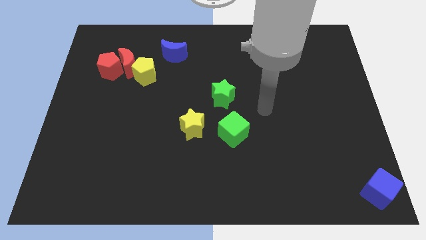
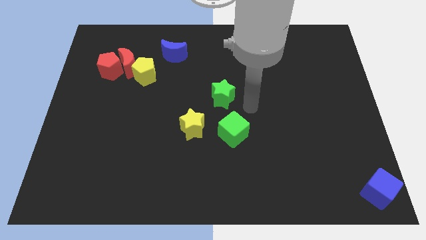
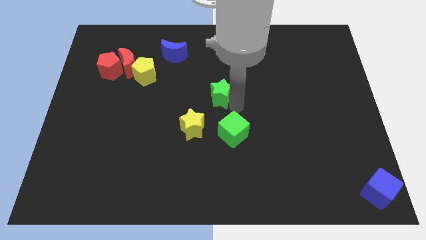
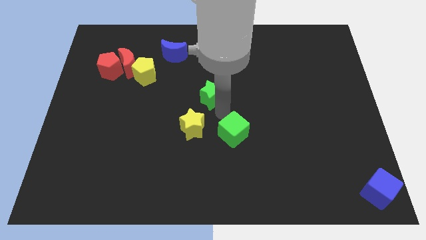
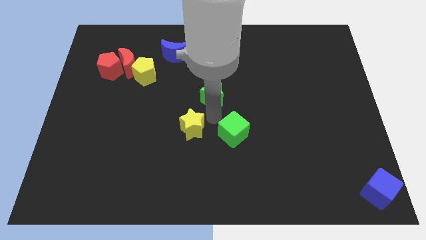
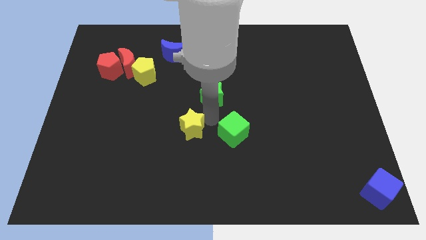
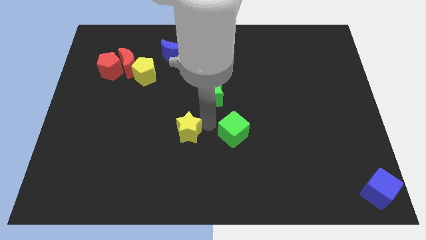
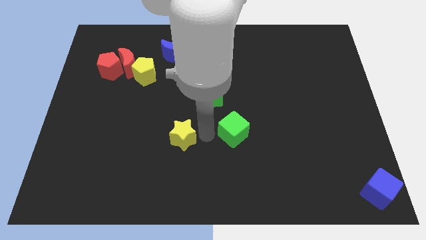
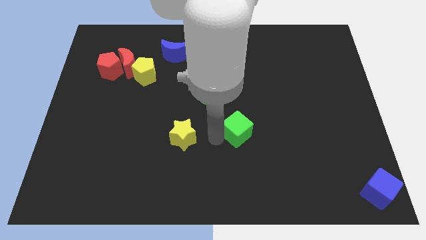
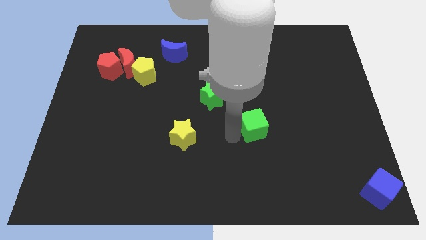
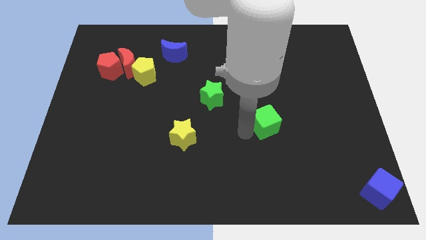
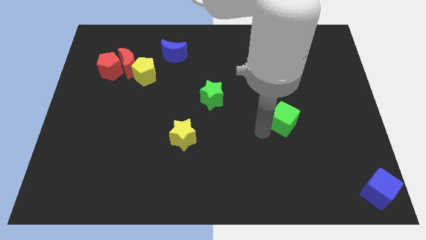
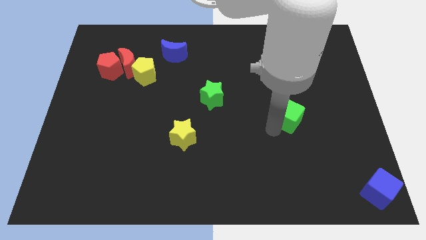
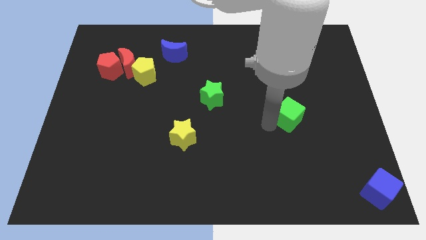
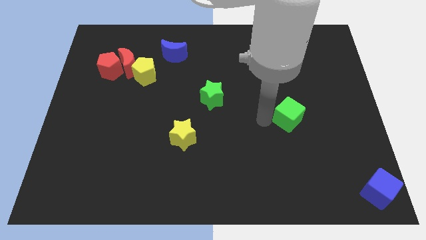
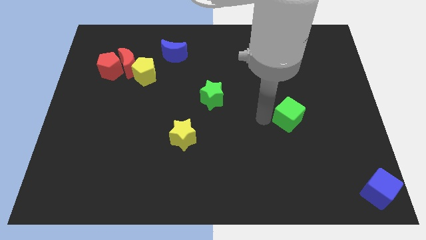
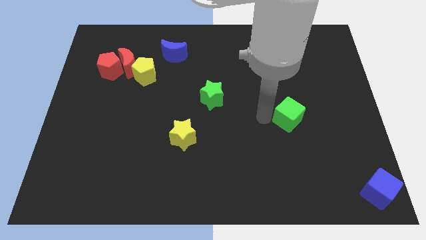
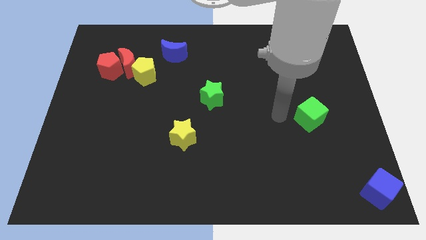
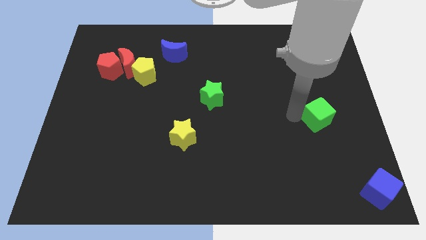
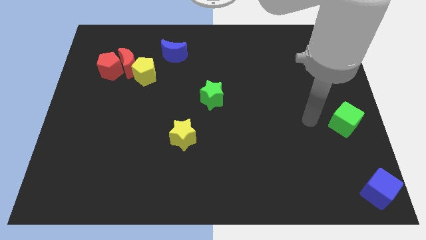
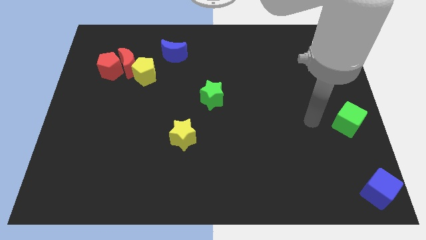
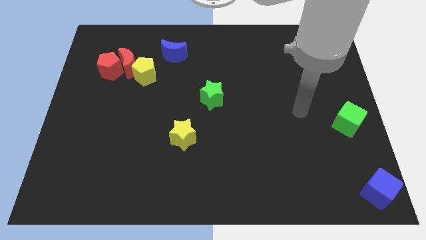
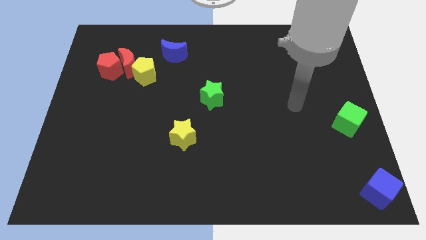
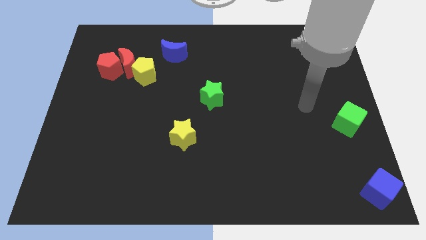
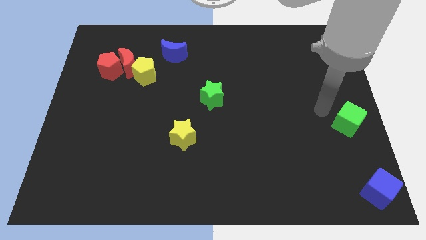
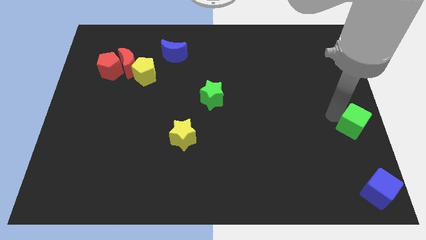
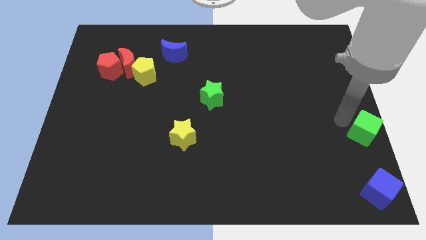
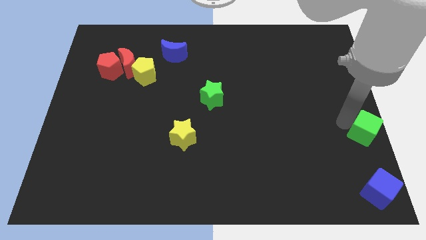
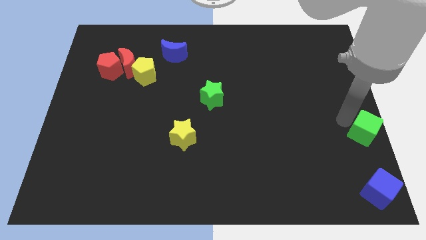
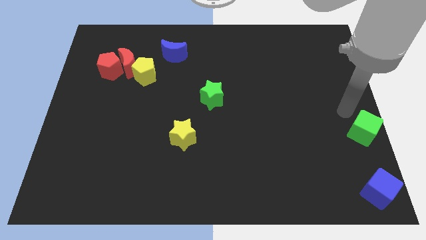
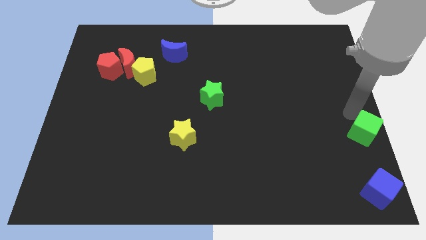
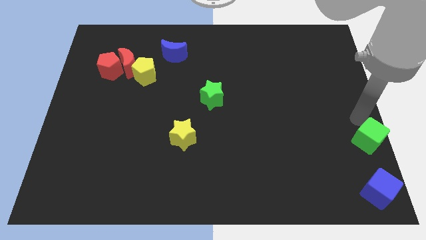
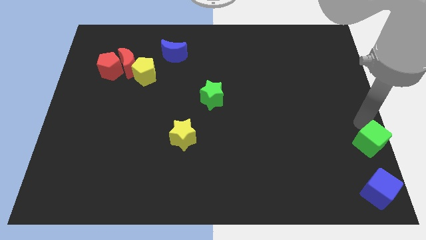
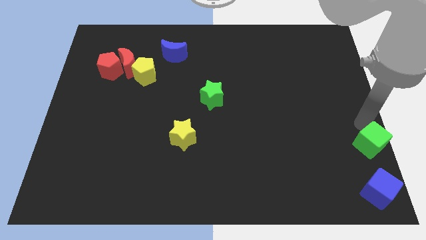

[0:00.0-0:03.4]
place the green cube above the blue cube

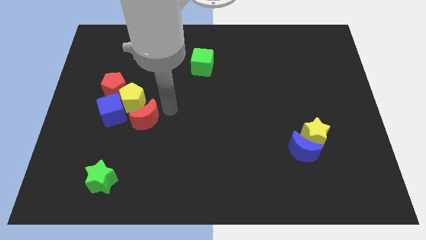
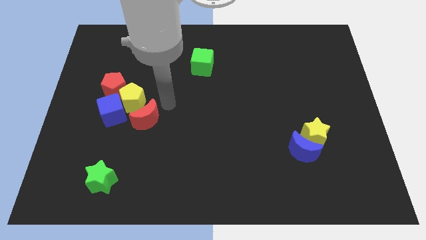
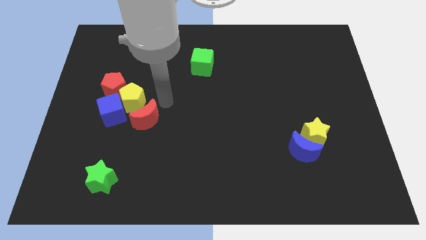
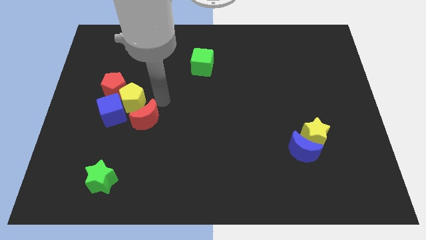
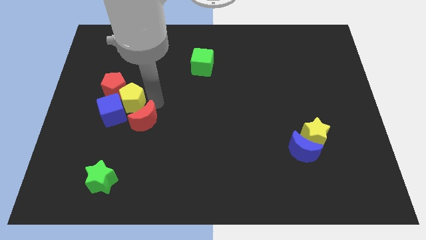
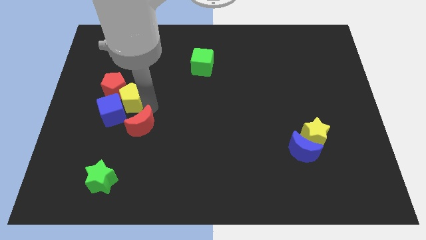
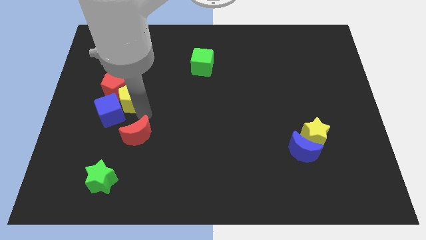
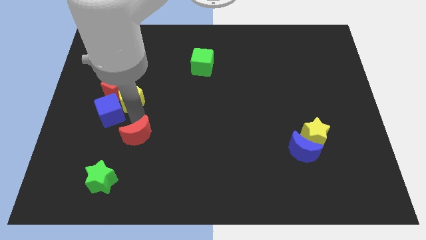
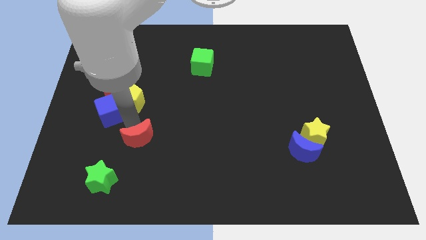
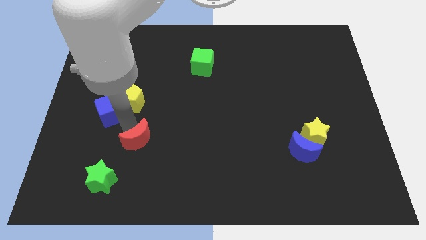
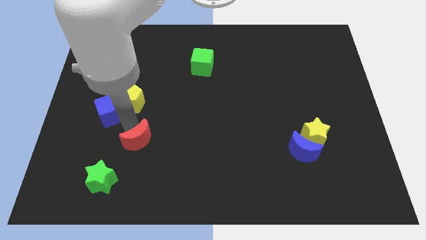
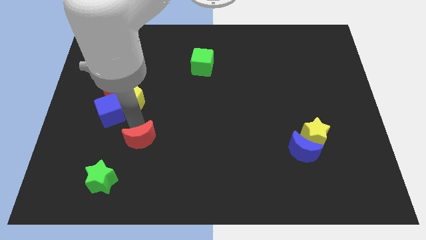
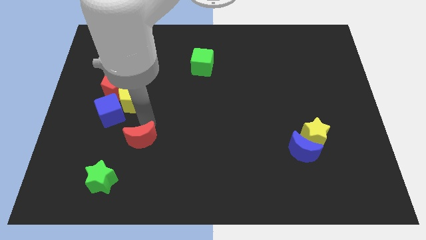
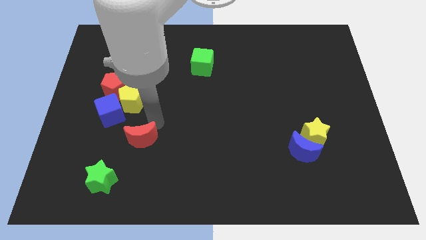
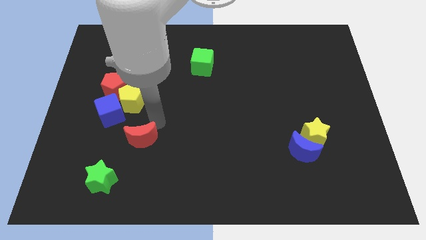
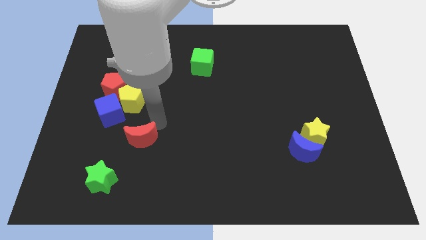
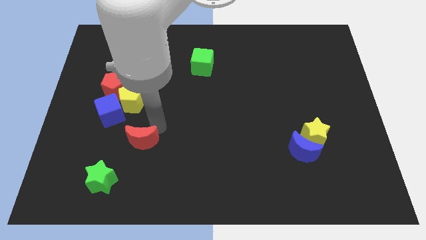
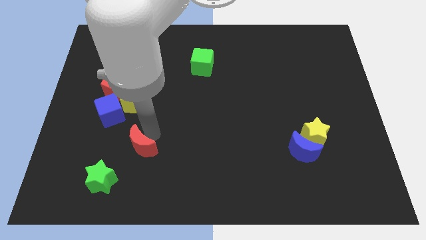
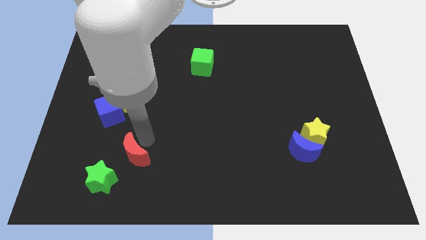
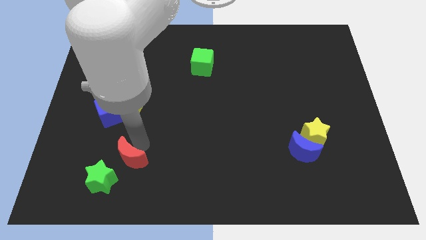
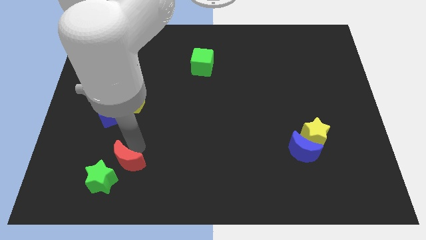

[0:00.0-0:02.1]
push the red moon towards top of green star

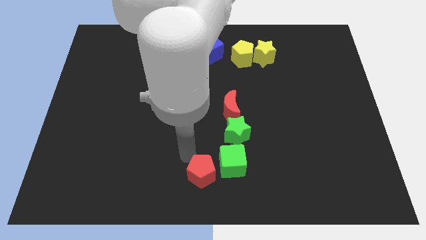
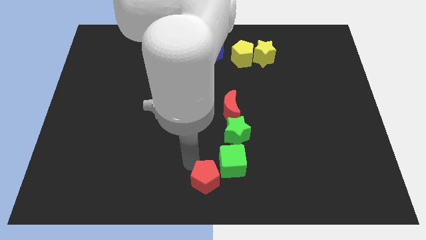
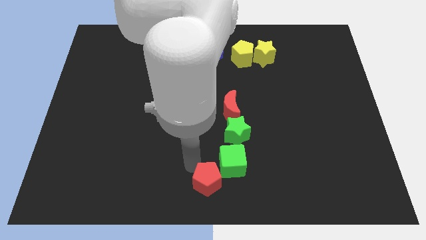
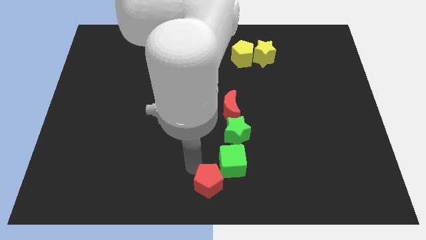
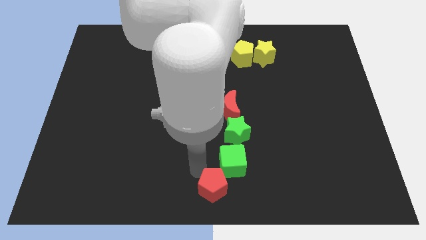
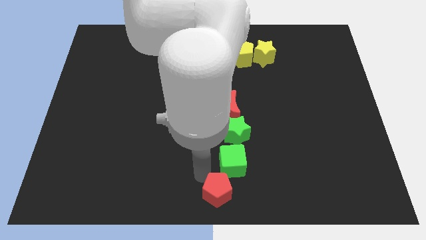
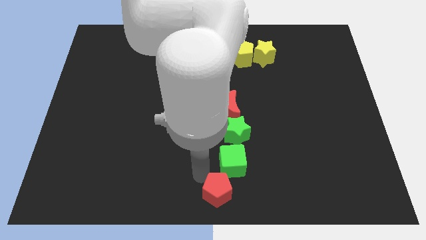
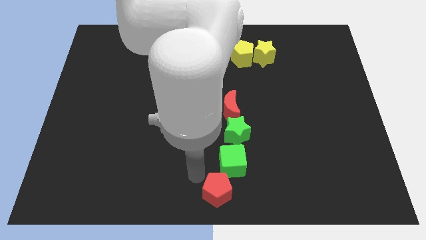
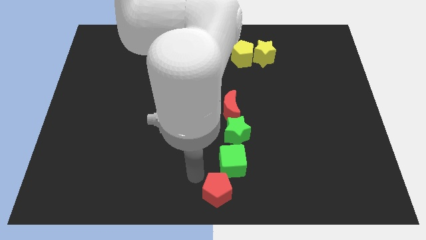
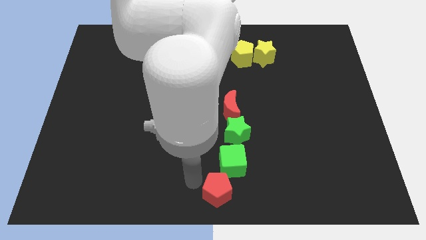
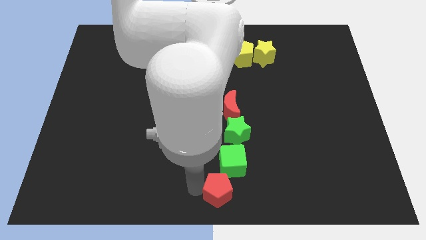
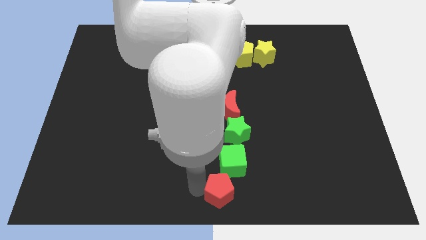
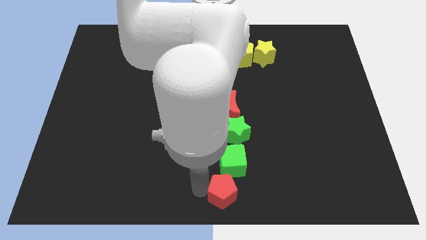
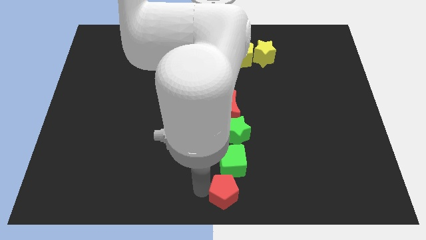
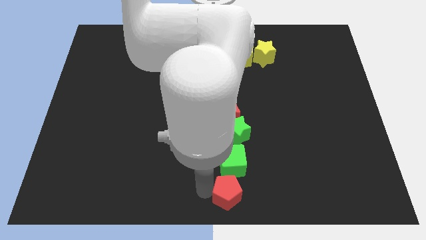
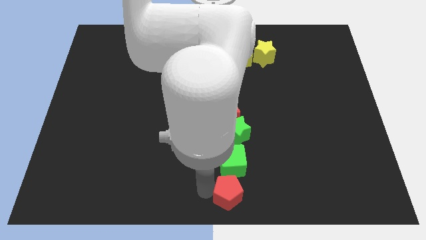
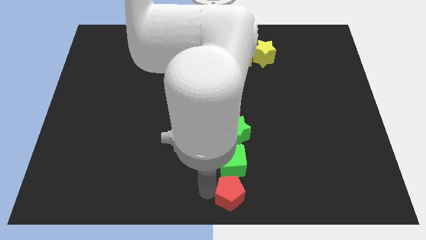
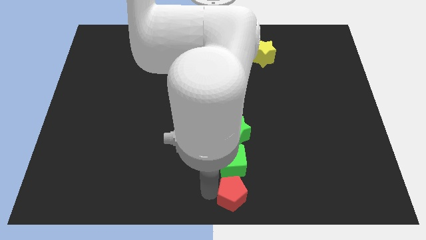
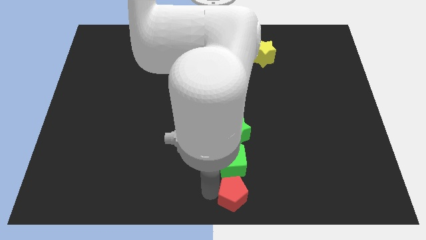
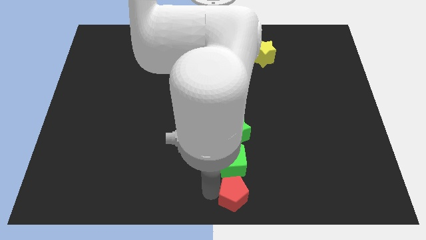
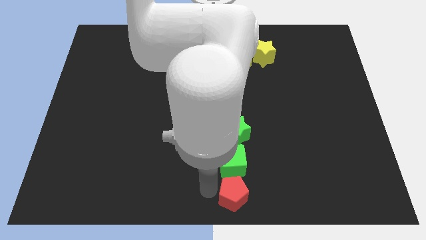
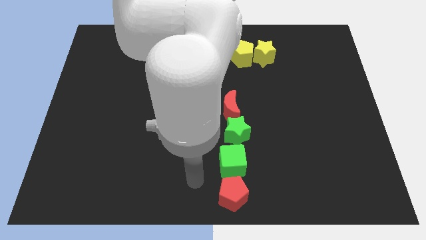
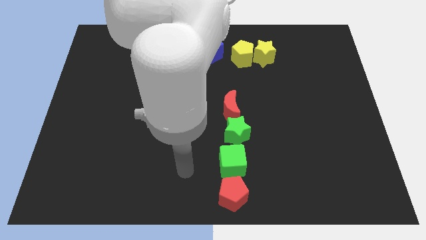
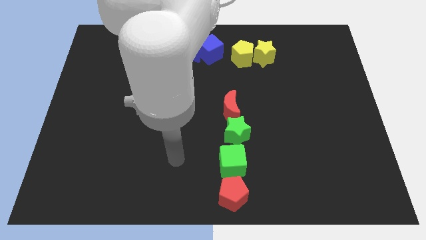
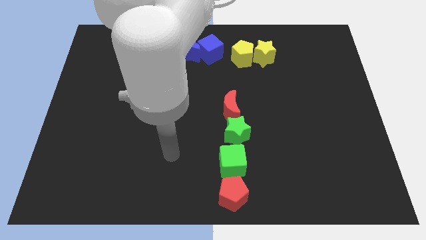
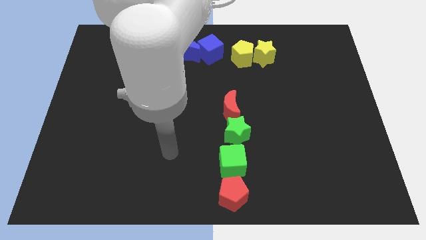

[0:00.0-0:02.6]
move the red pentagon below the green cube

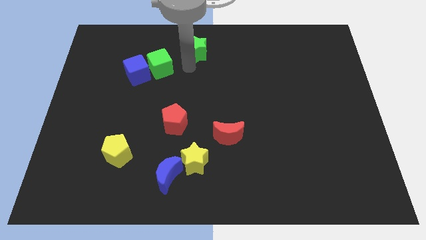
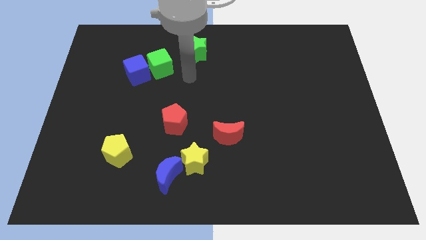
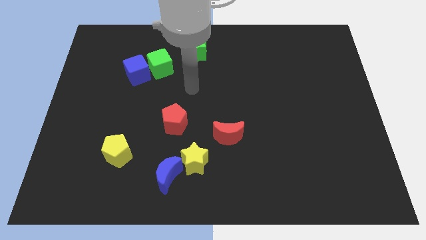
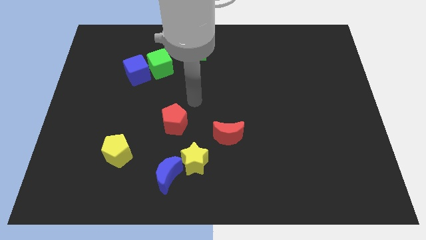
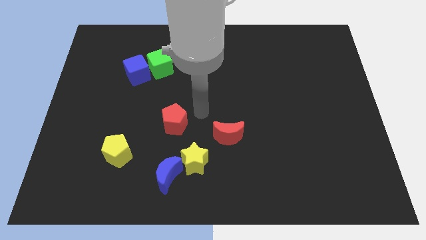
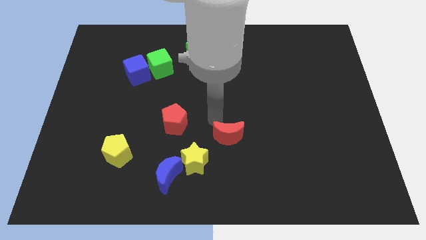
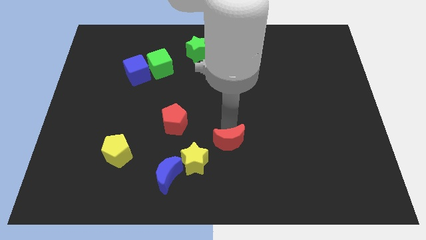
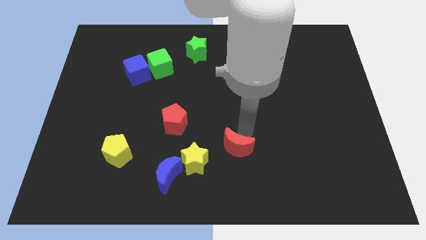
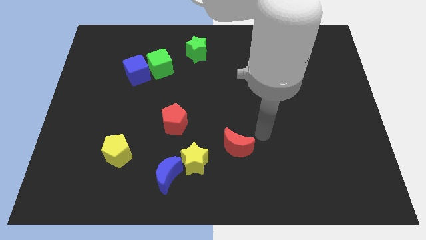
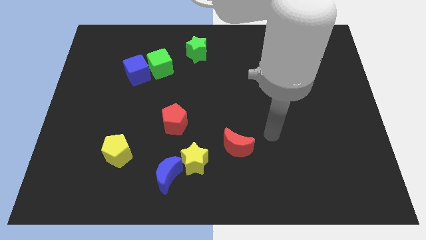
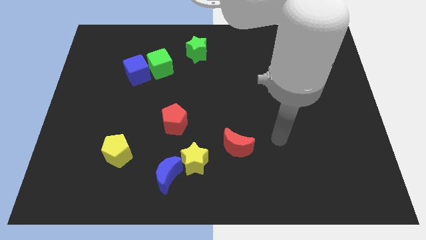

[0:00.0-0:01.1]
slightly touch the red moon
